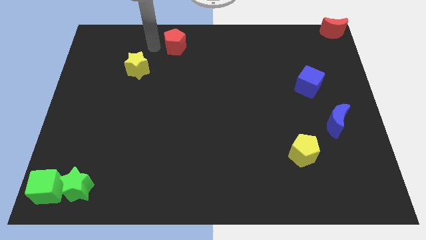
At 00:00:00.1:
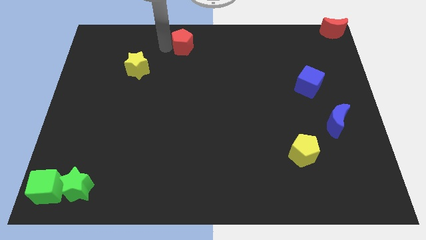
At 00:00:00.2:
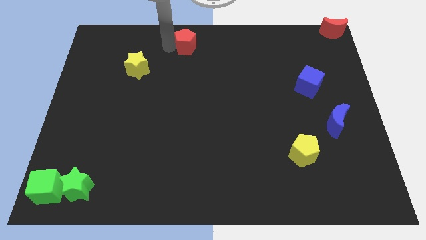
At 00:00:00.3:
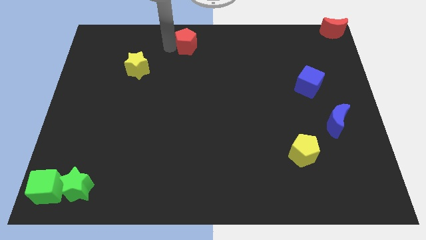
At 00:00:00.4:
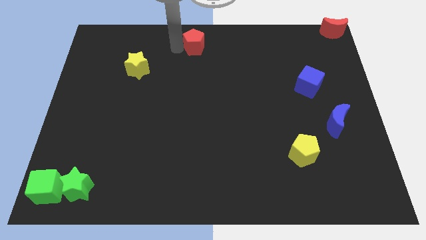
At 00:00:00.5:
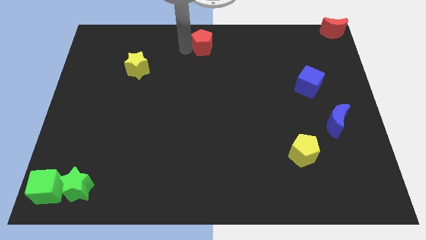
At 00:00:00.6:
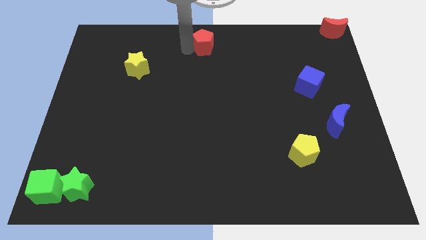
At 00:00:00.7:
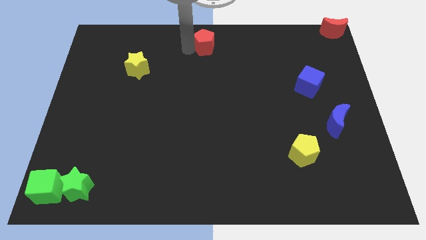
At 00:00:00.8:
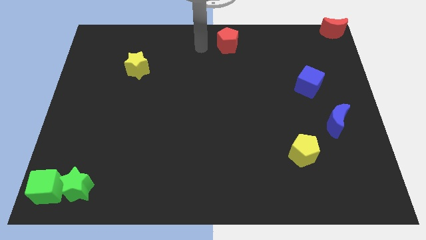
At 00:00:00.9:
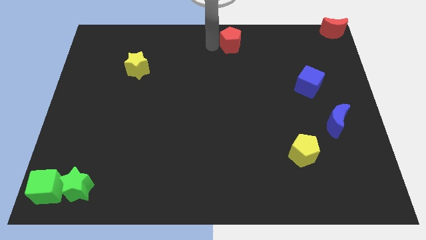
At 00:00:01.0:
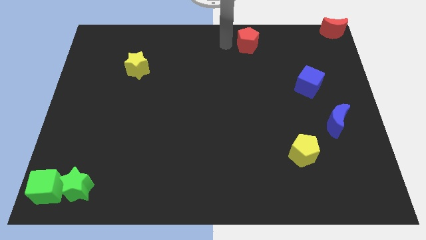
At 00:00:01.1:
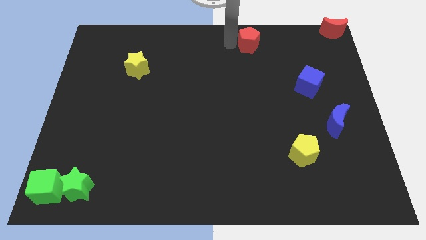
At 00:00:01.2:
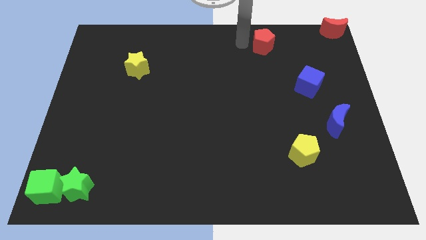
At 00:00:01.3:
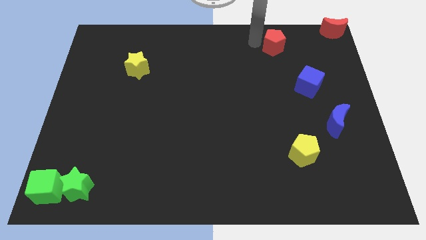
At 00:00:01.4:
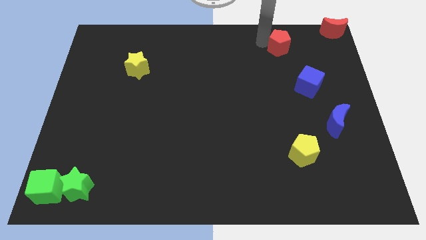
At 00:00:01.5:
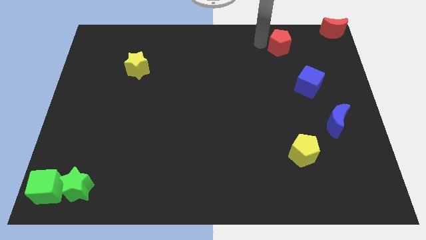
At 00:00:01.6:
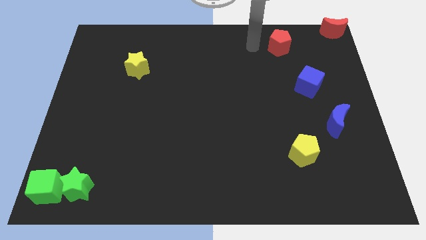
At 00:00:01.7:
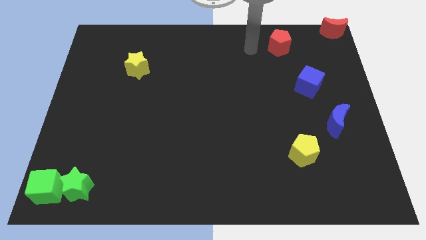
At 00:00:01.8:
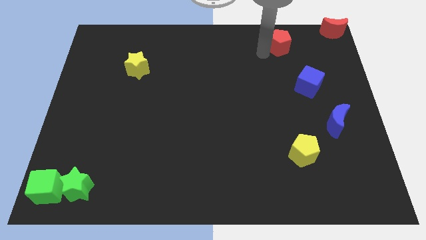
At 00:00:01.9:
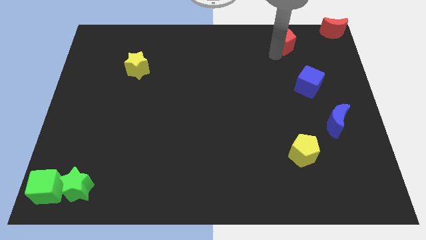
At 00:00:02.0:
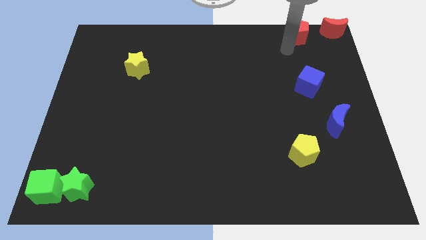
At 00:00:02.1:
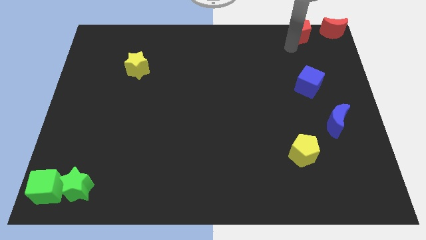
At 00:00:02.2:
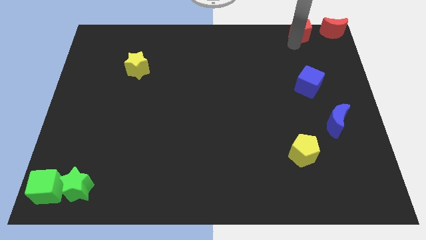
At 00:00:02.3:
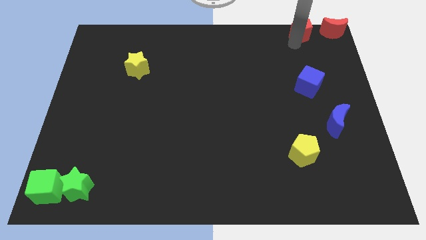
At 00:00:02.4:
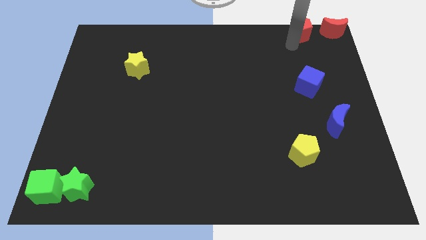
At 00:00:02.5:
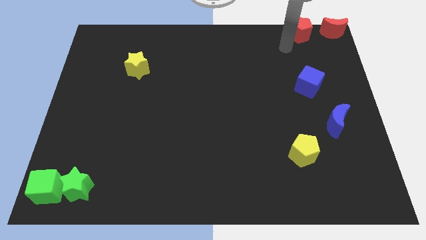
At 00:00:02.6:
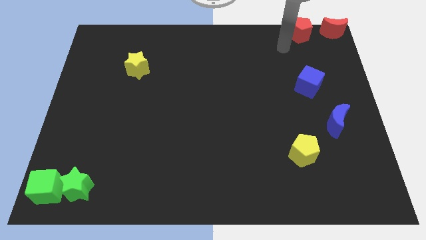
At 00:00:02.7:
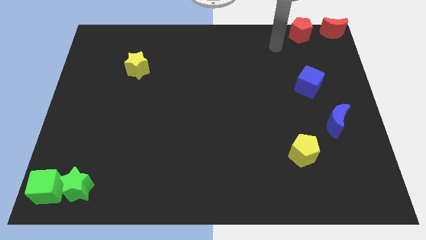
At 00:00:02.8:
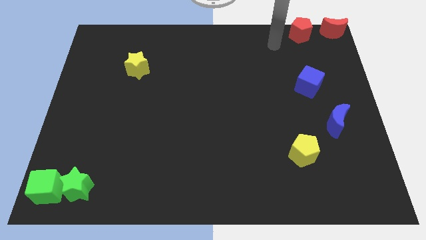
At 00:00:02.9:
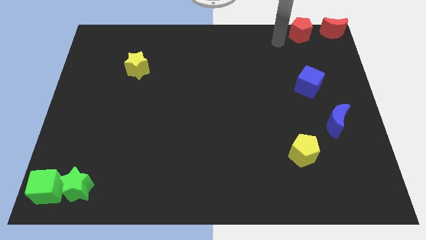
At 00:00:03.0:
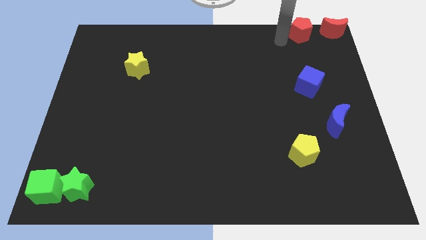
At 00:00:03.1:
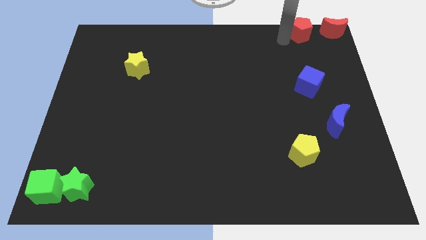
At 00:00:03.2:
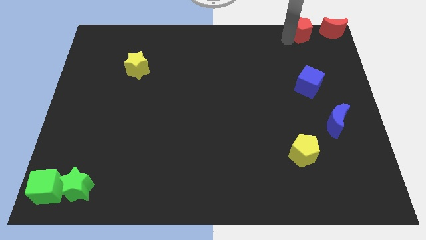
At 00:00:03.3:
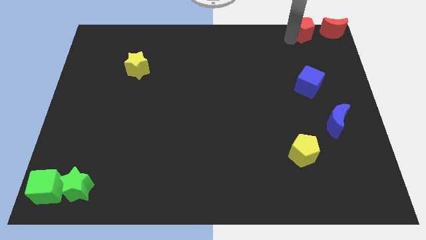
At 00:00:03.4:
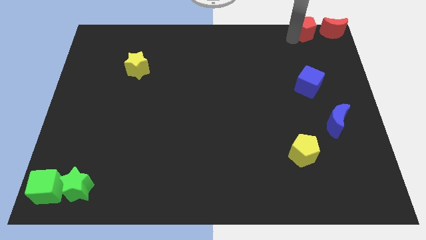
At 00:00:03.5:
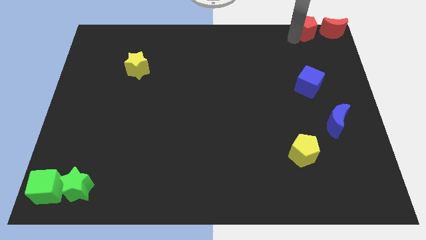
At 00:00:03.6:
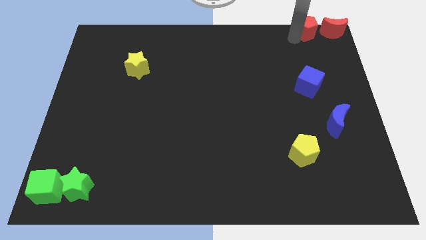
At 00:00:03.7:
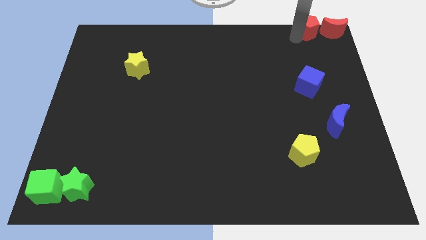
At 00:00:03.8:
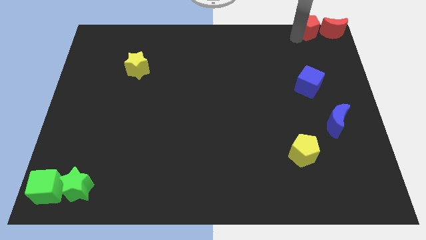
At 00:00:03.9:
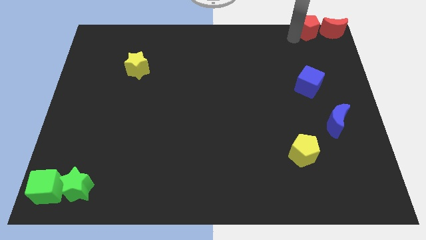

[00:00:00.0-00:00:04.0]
push the red pentagon to the left of red crescent

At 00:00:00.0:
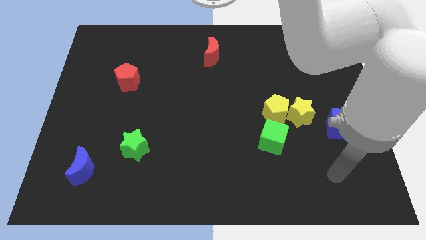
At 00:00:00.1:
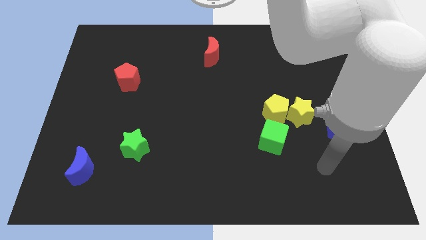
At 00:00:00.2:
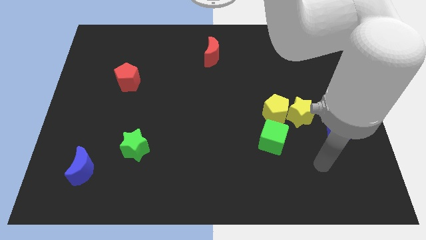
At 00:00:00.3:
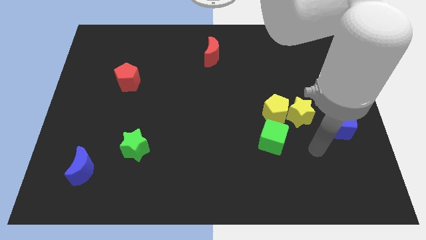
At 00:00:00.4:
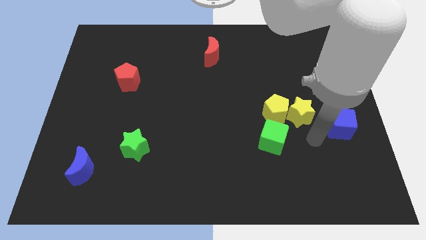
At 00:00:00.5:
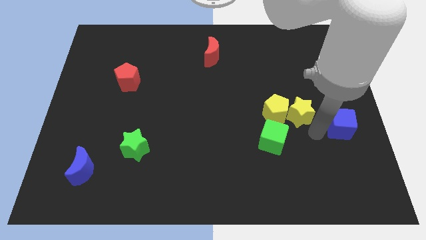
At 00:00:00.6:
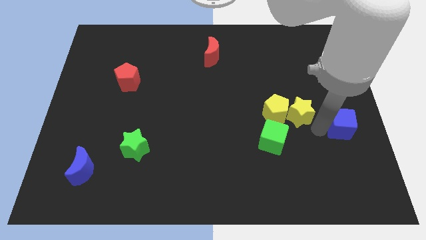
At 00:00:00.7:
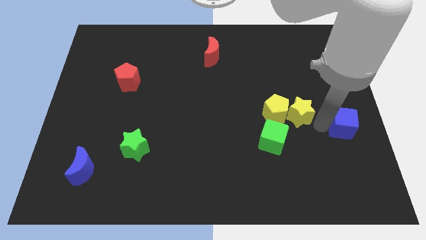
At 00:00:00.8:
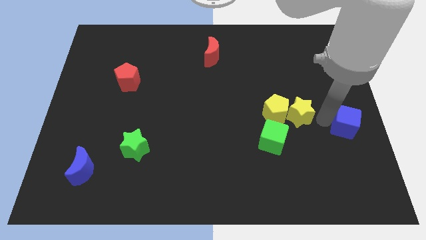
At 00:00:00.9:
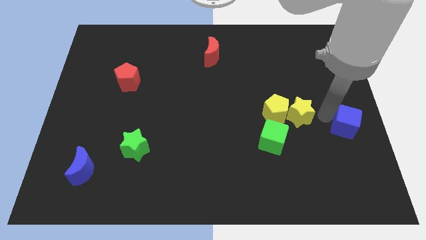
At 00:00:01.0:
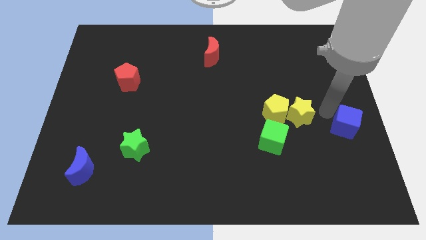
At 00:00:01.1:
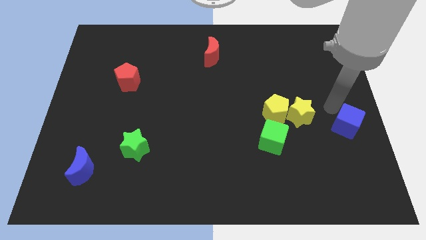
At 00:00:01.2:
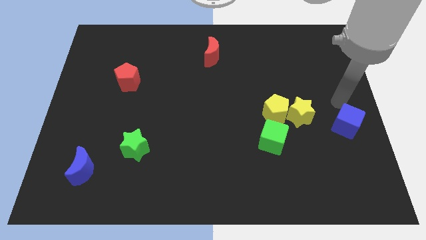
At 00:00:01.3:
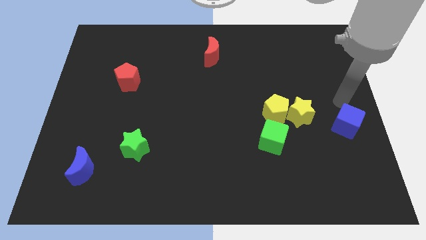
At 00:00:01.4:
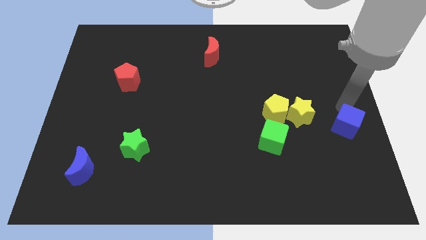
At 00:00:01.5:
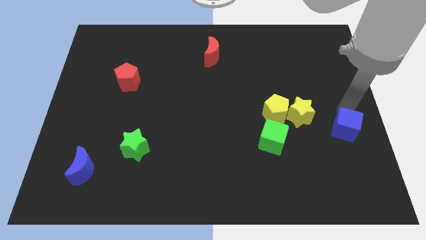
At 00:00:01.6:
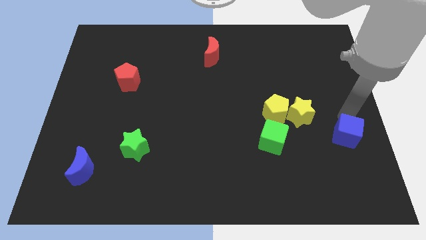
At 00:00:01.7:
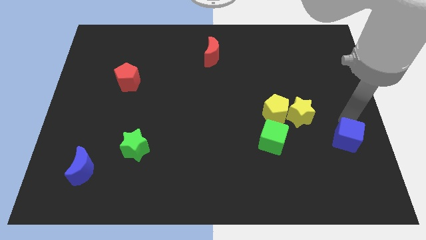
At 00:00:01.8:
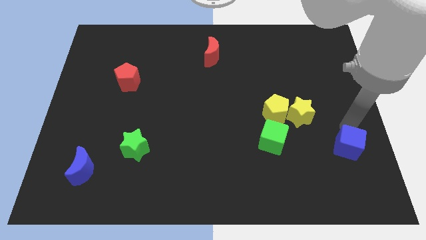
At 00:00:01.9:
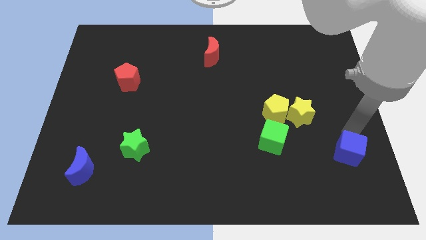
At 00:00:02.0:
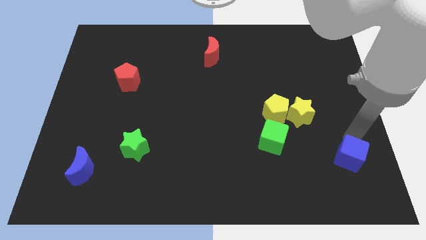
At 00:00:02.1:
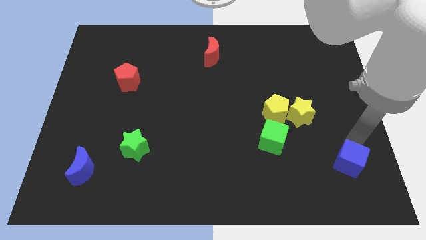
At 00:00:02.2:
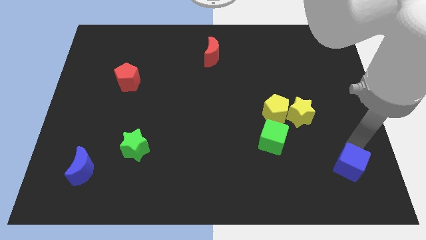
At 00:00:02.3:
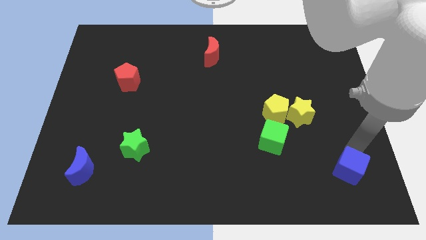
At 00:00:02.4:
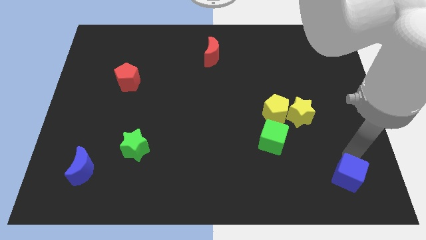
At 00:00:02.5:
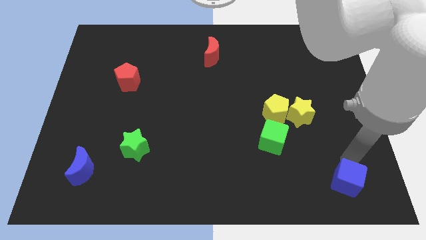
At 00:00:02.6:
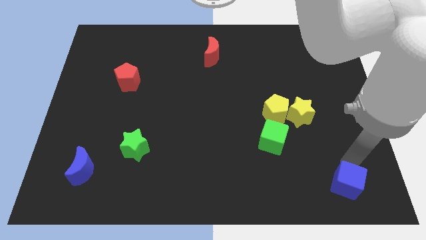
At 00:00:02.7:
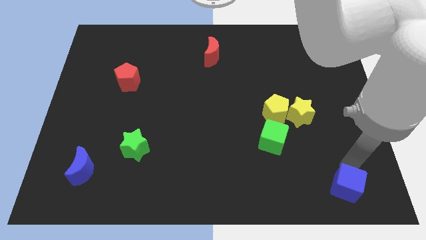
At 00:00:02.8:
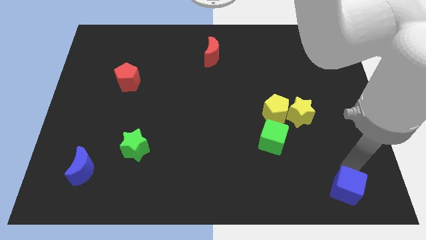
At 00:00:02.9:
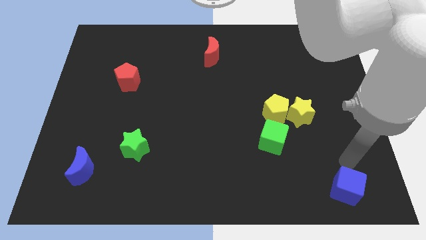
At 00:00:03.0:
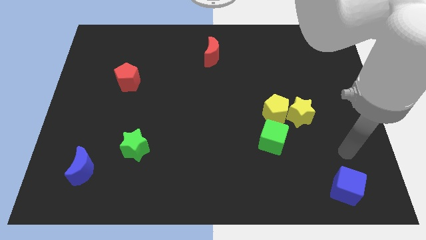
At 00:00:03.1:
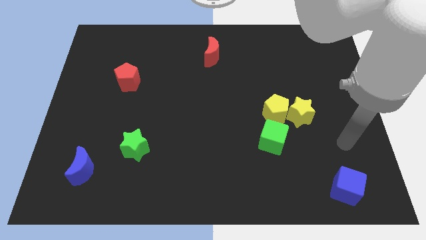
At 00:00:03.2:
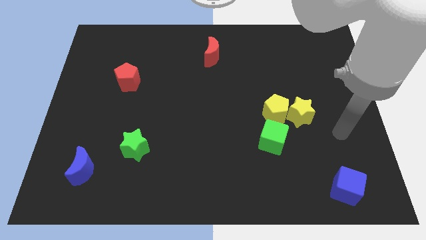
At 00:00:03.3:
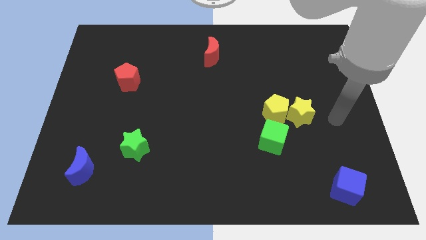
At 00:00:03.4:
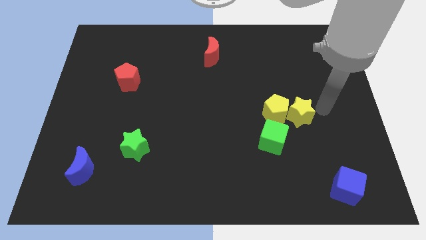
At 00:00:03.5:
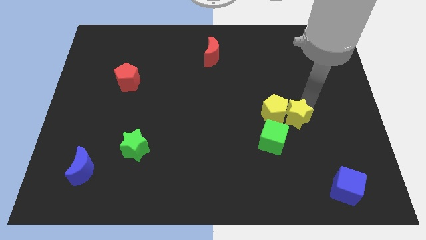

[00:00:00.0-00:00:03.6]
push the blue cube to the bottom of the board

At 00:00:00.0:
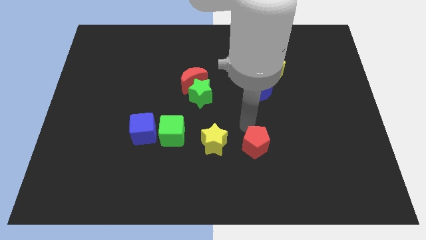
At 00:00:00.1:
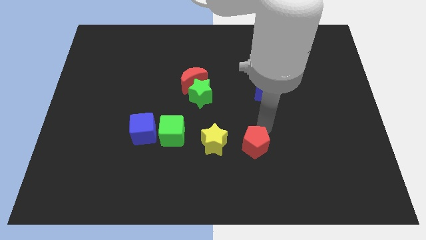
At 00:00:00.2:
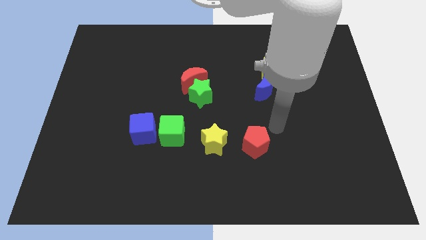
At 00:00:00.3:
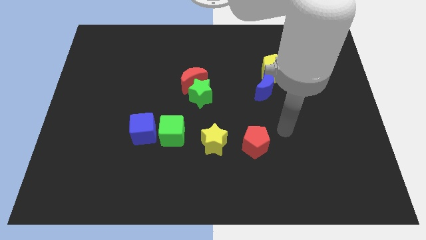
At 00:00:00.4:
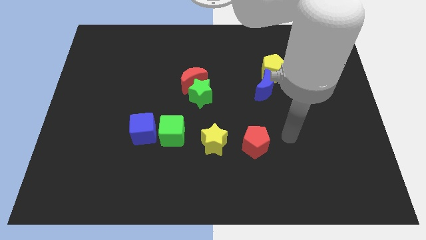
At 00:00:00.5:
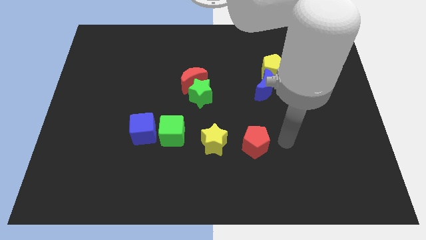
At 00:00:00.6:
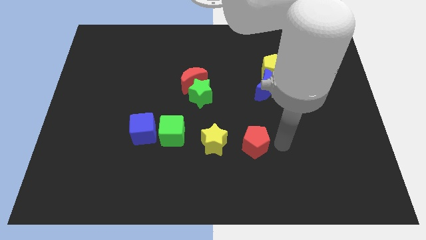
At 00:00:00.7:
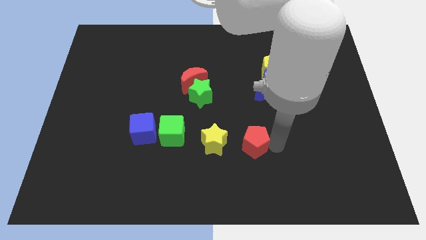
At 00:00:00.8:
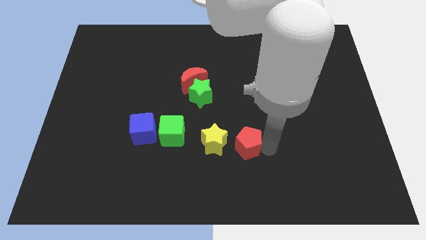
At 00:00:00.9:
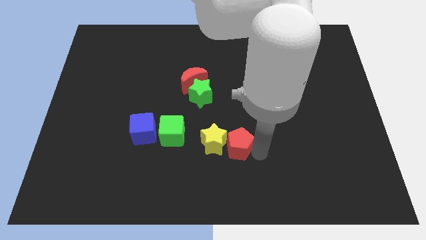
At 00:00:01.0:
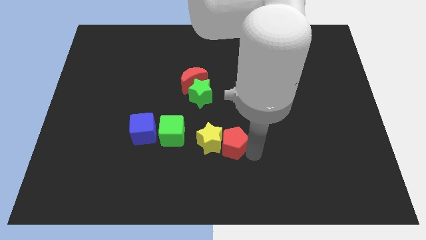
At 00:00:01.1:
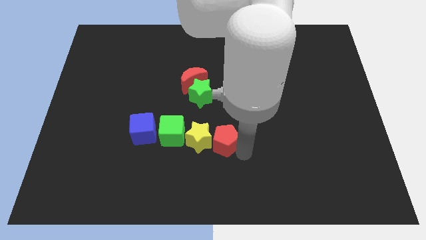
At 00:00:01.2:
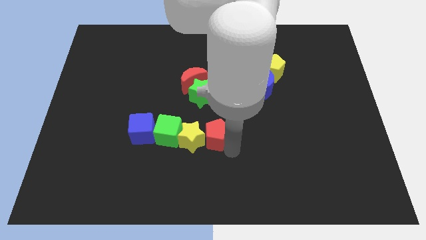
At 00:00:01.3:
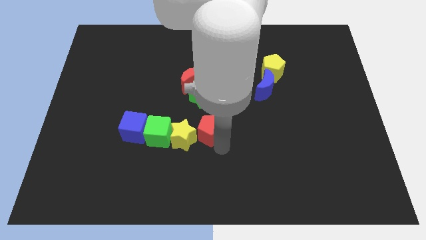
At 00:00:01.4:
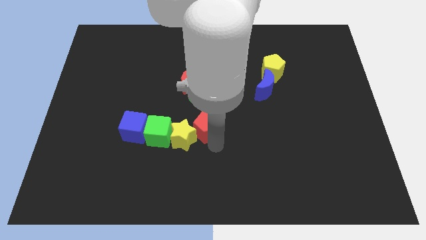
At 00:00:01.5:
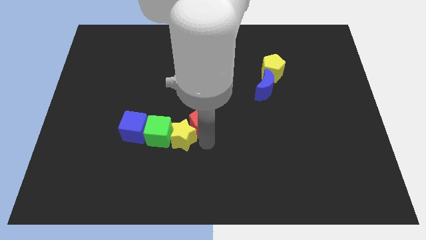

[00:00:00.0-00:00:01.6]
move the red pentagon into the yellow star
